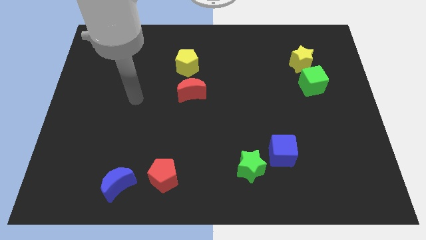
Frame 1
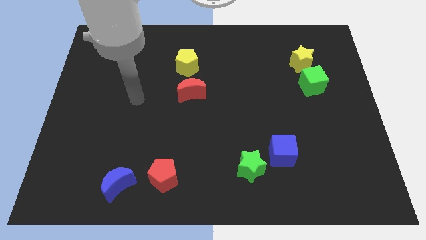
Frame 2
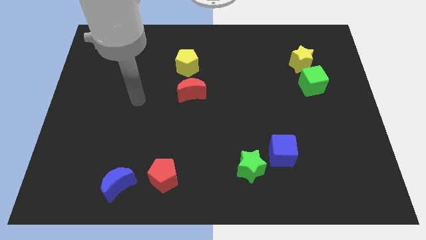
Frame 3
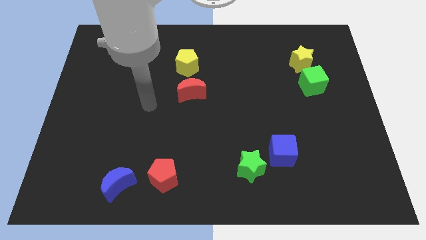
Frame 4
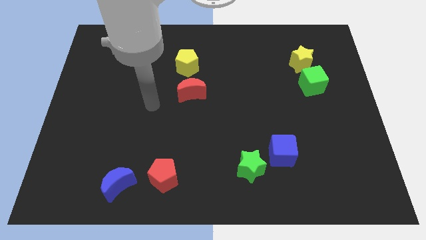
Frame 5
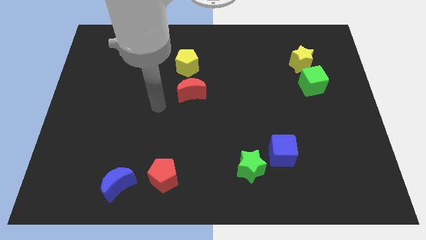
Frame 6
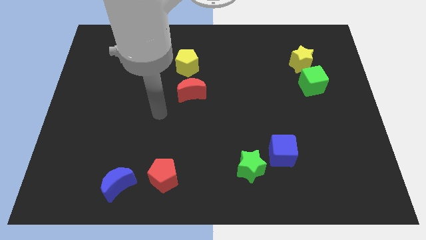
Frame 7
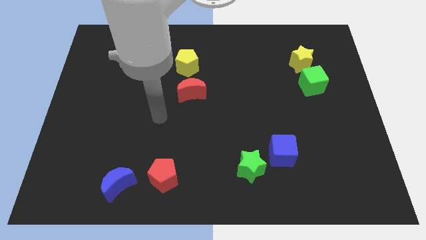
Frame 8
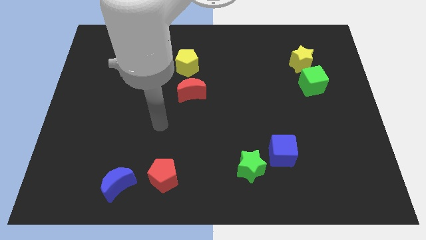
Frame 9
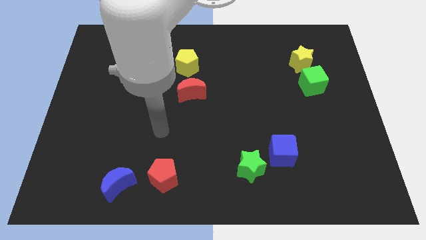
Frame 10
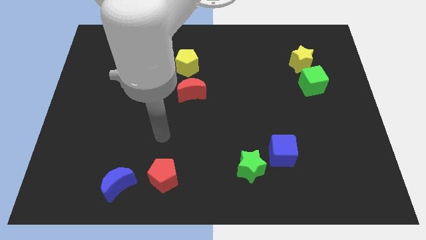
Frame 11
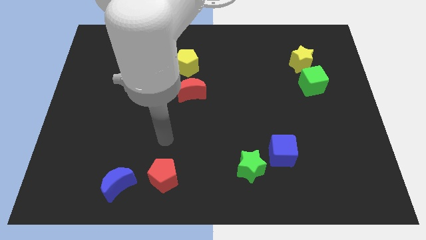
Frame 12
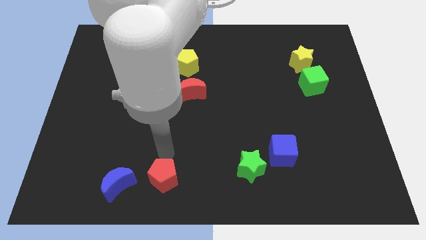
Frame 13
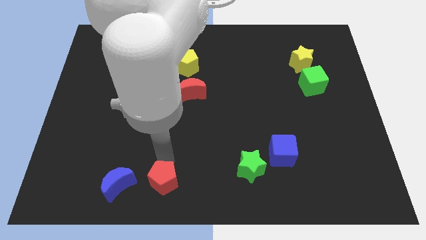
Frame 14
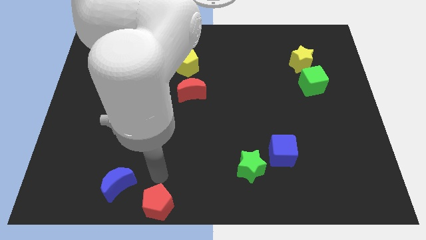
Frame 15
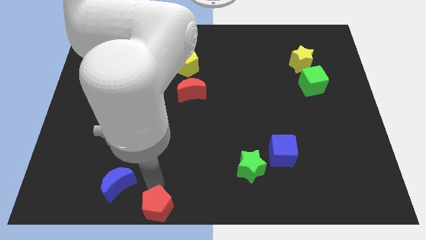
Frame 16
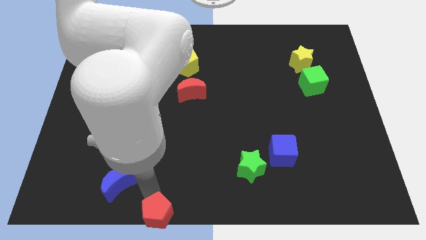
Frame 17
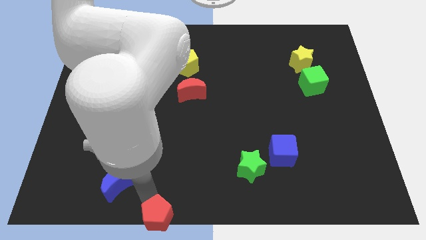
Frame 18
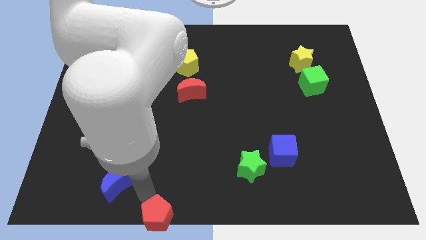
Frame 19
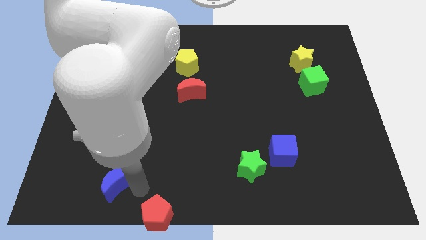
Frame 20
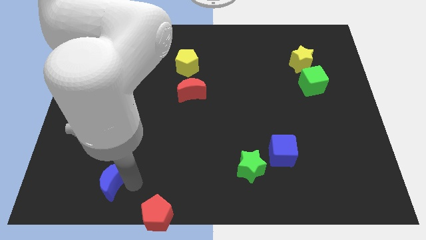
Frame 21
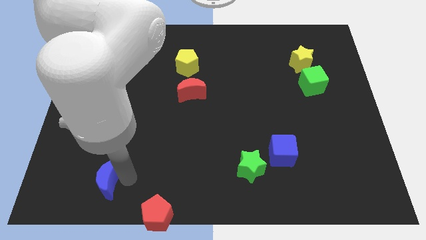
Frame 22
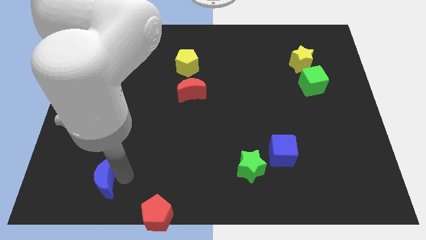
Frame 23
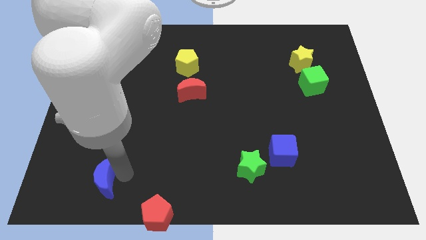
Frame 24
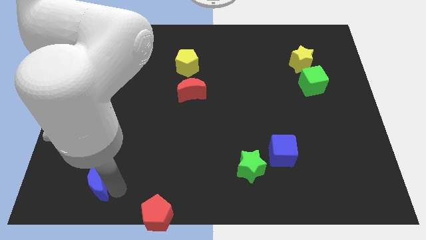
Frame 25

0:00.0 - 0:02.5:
push the red pentagon at the bottom center of the board

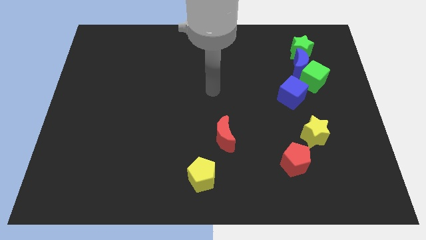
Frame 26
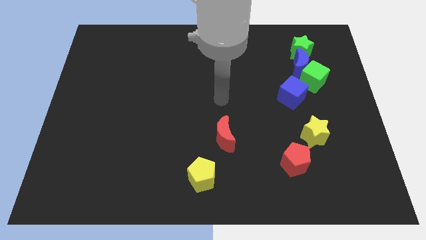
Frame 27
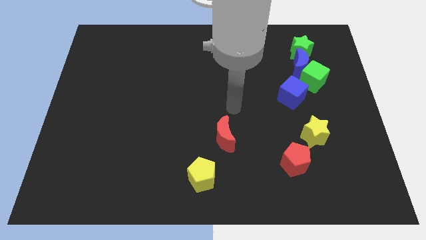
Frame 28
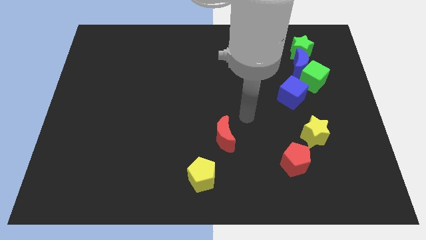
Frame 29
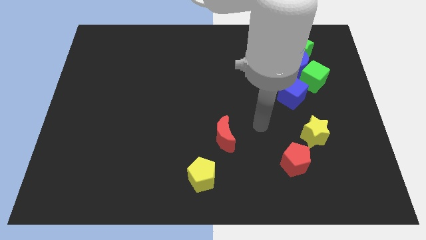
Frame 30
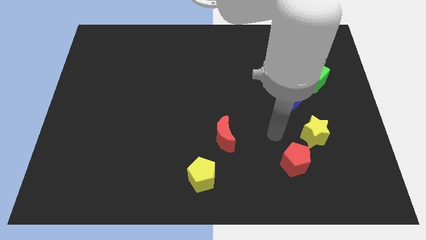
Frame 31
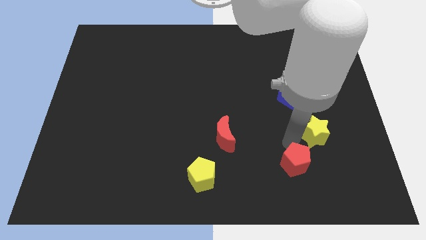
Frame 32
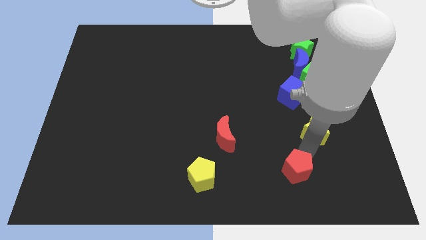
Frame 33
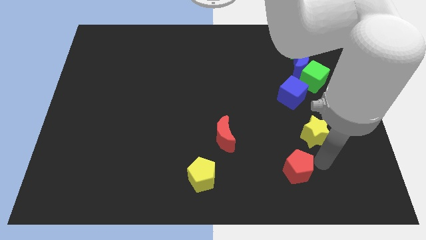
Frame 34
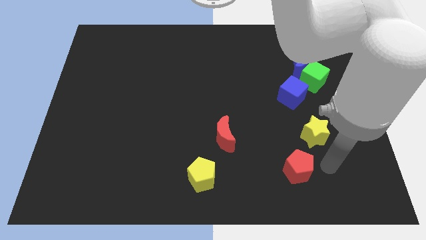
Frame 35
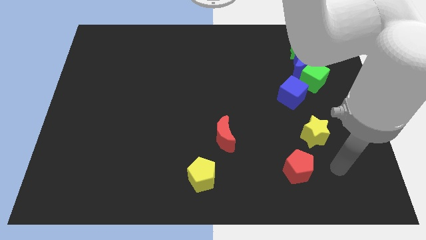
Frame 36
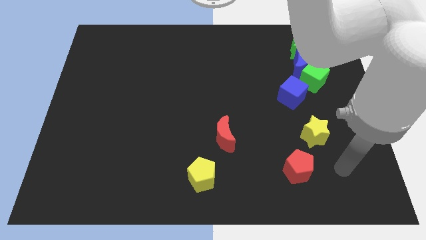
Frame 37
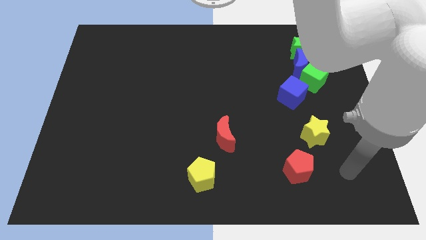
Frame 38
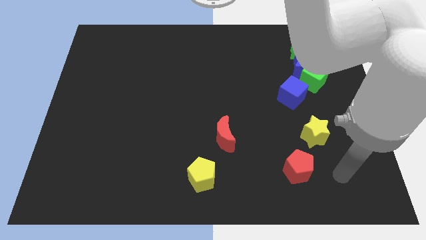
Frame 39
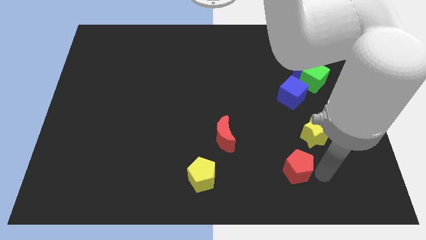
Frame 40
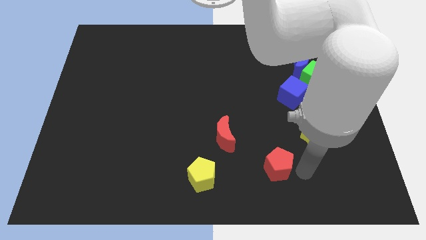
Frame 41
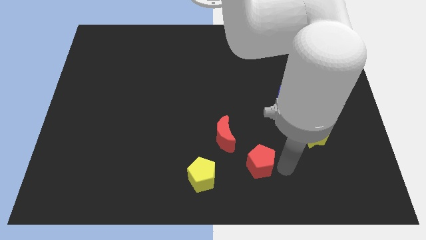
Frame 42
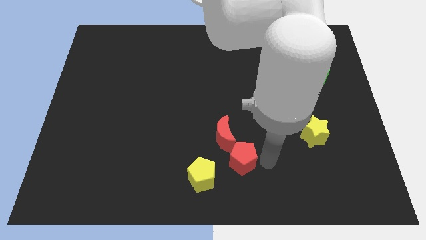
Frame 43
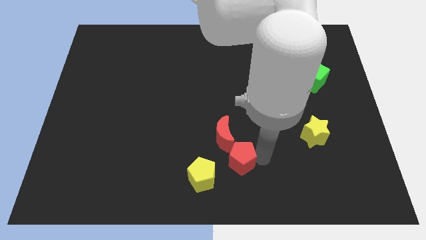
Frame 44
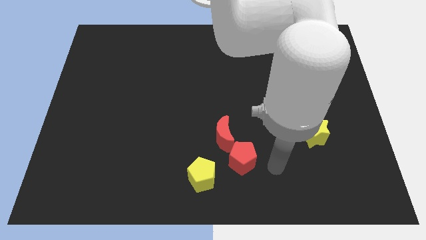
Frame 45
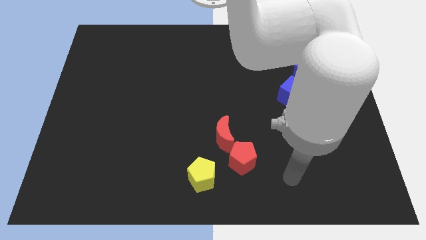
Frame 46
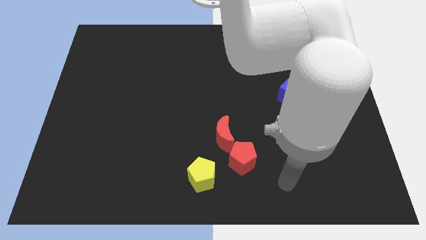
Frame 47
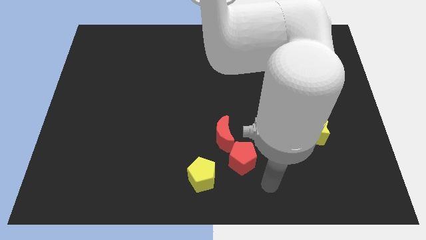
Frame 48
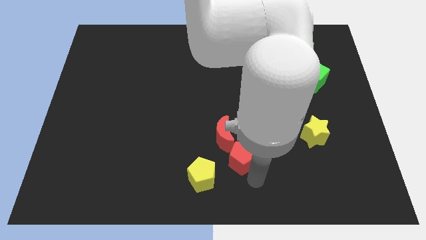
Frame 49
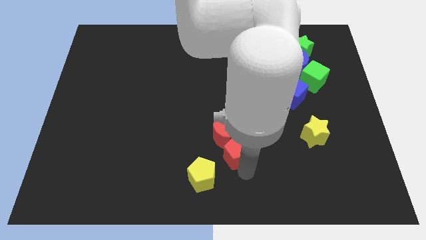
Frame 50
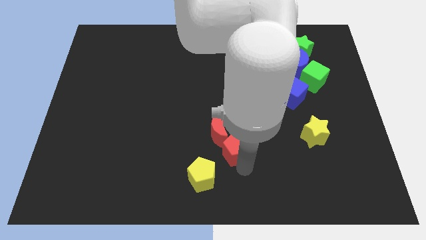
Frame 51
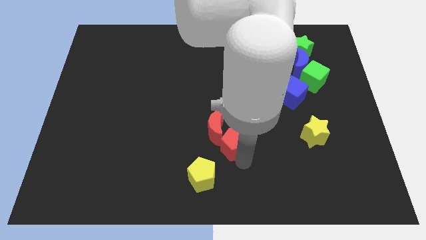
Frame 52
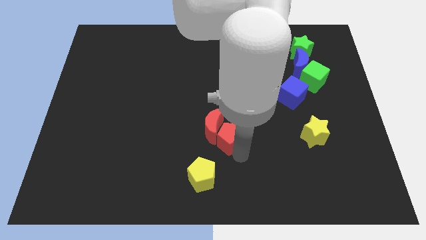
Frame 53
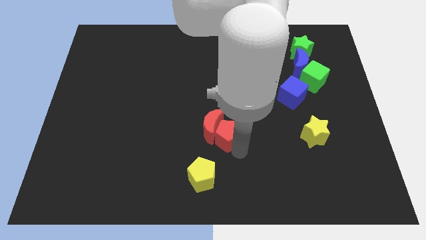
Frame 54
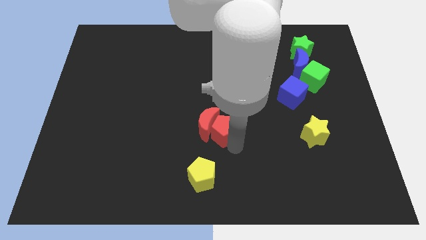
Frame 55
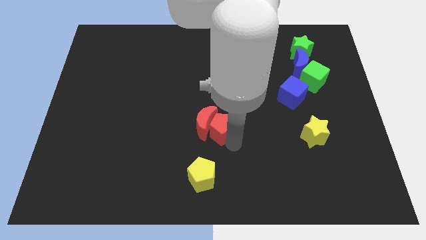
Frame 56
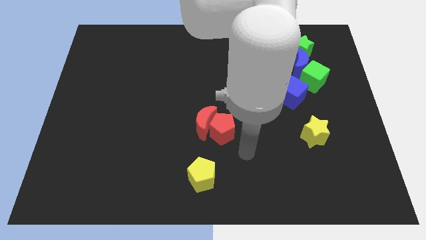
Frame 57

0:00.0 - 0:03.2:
push the red pentagon into the red moon

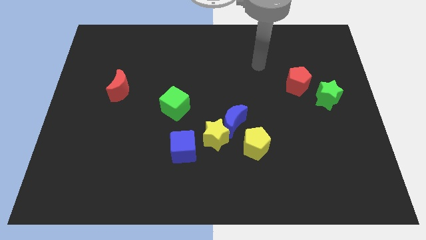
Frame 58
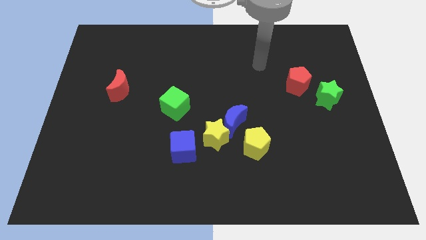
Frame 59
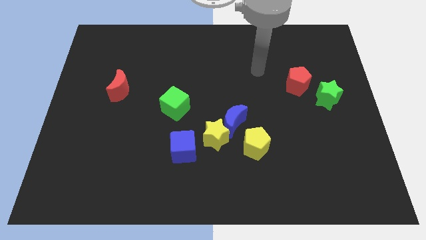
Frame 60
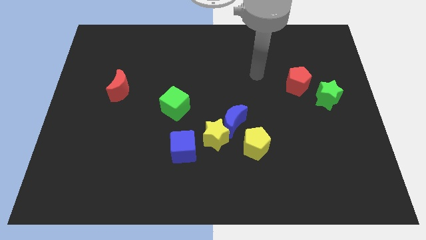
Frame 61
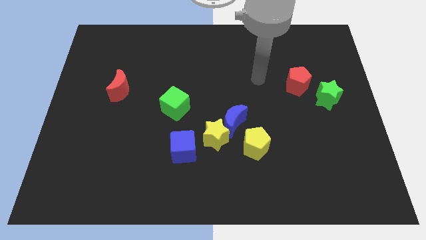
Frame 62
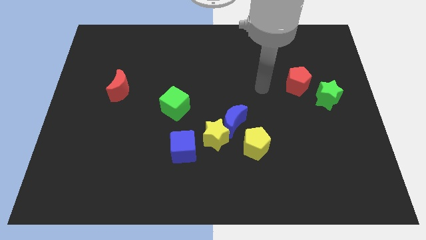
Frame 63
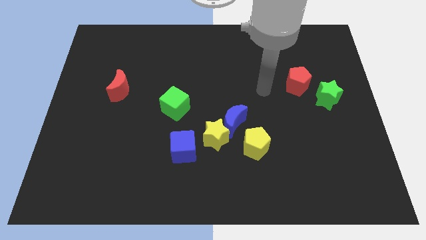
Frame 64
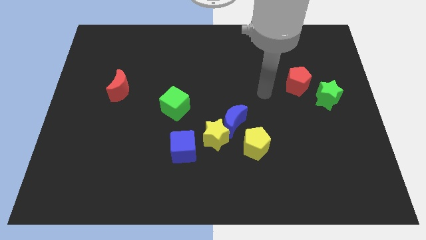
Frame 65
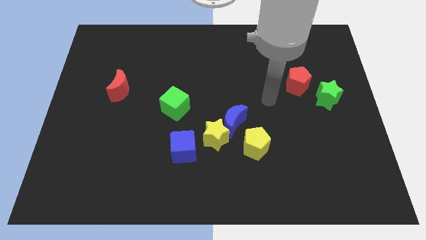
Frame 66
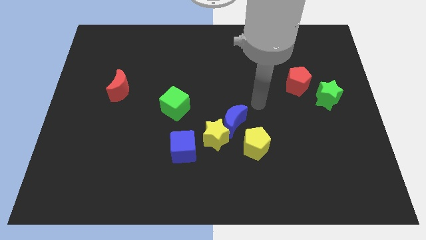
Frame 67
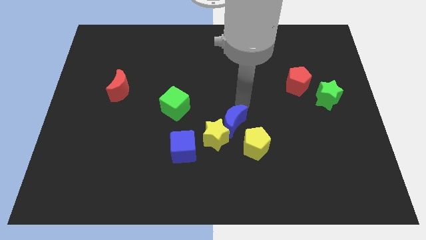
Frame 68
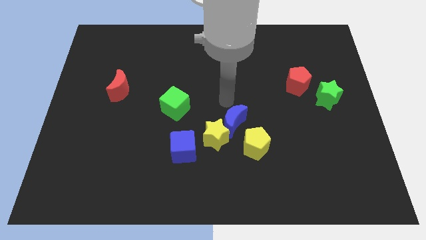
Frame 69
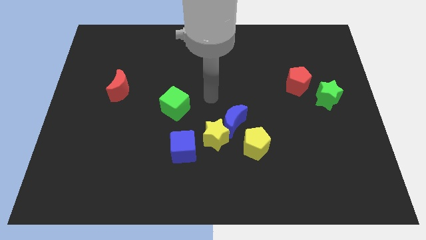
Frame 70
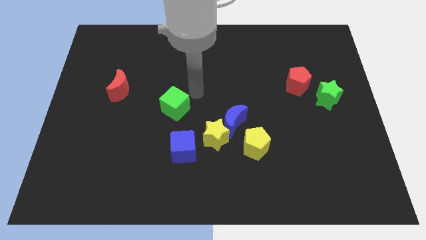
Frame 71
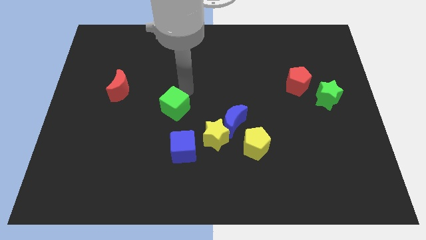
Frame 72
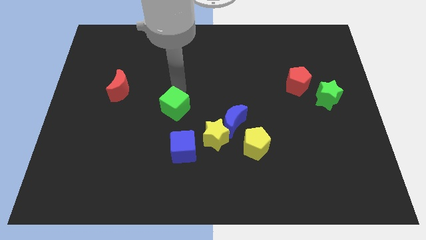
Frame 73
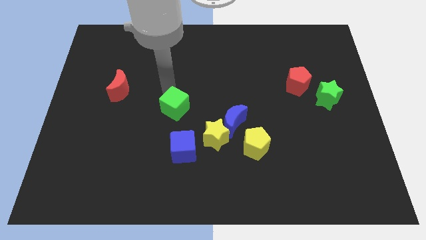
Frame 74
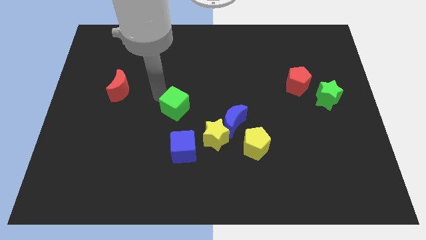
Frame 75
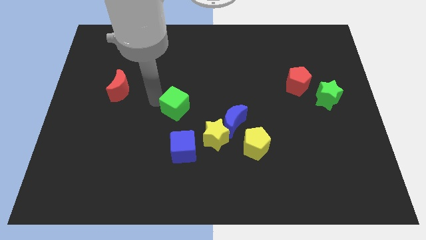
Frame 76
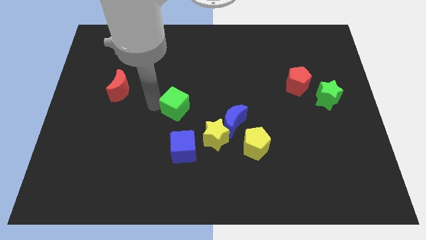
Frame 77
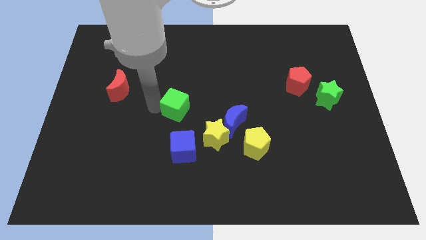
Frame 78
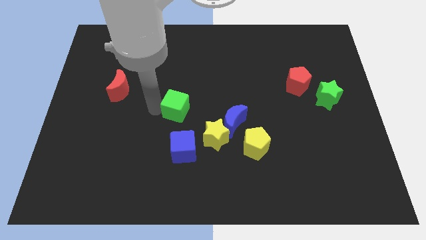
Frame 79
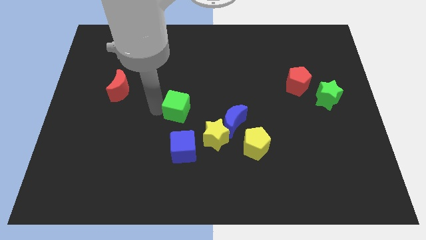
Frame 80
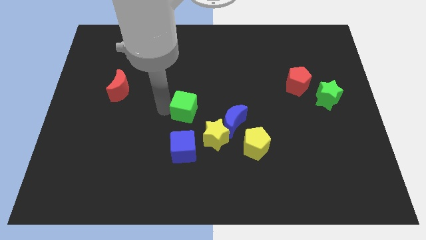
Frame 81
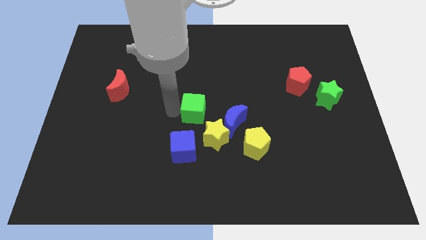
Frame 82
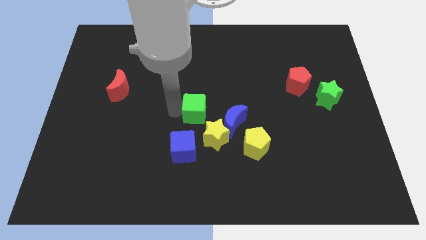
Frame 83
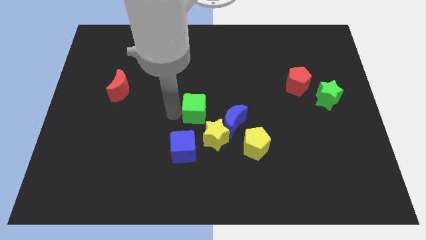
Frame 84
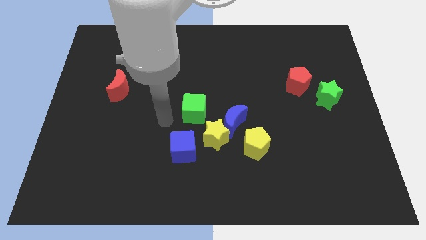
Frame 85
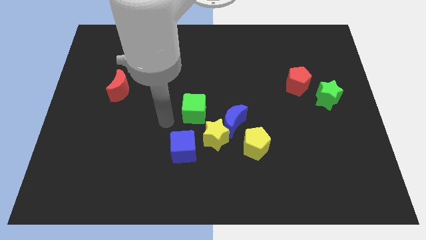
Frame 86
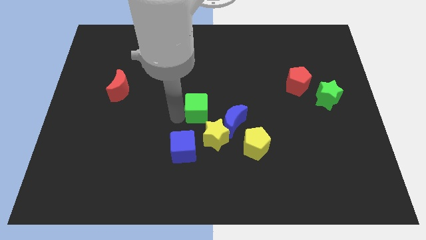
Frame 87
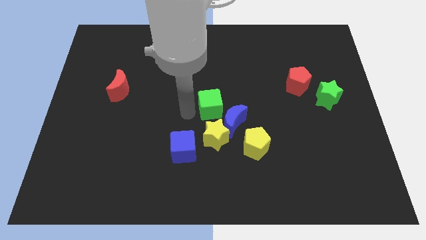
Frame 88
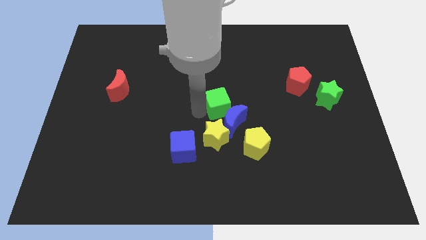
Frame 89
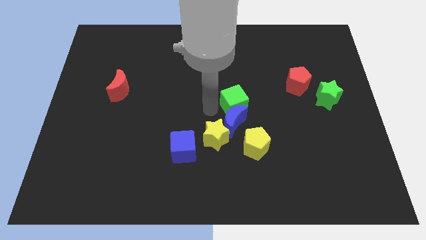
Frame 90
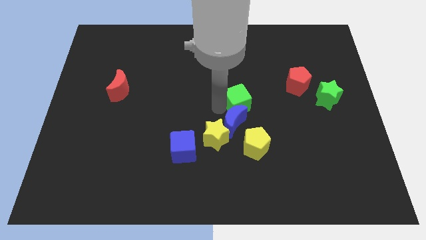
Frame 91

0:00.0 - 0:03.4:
push the green cube to the top of the blue moon
